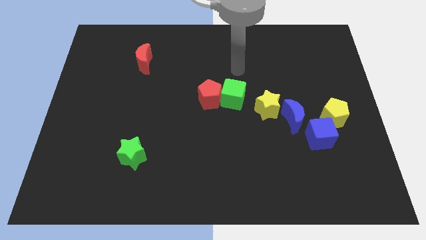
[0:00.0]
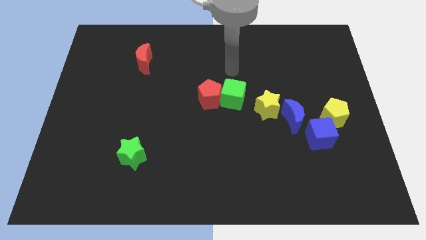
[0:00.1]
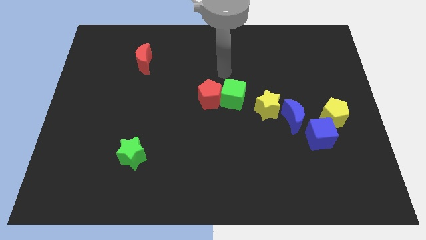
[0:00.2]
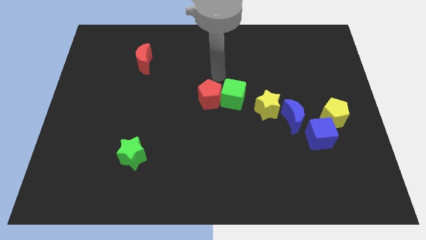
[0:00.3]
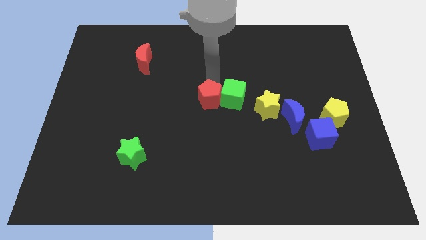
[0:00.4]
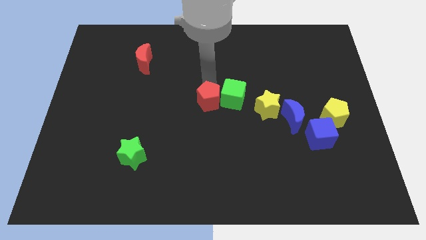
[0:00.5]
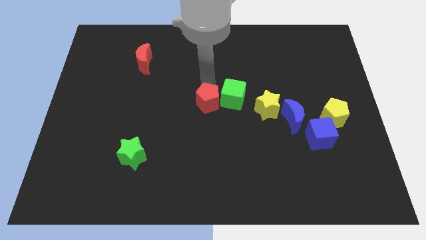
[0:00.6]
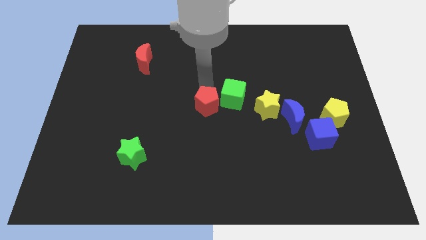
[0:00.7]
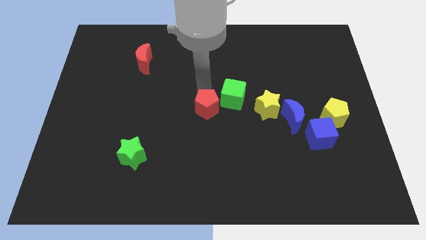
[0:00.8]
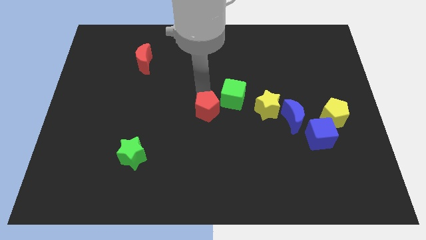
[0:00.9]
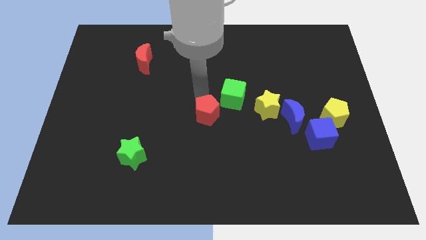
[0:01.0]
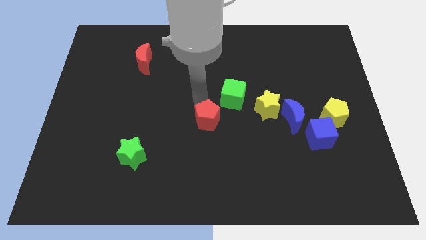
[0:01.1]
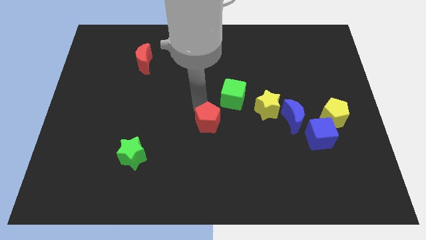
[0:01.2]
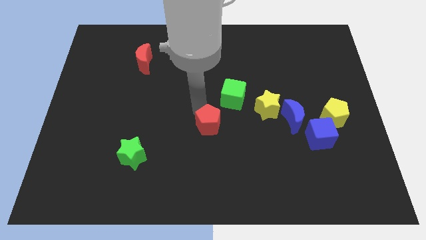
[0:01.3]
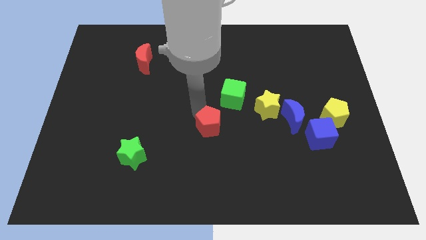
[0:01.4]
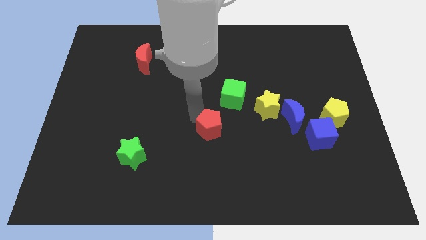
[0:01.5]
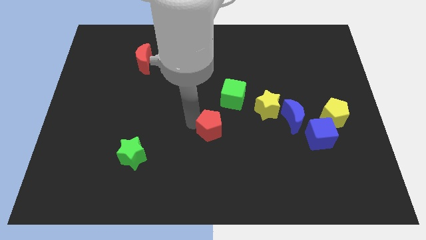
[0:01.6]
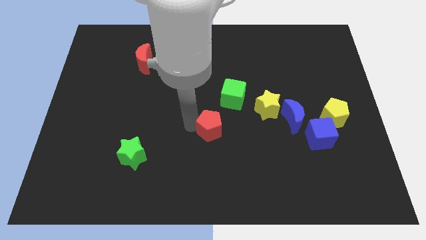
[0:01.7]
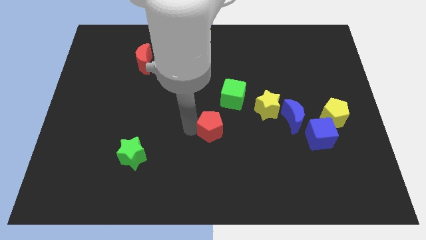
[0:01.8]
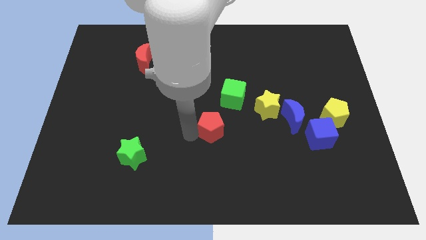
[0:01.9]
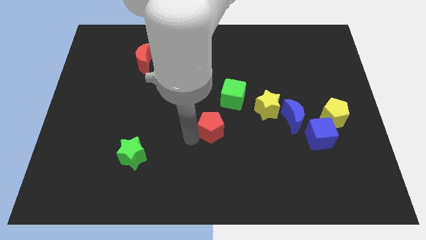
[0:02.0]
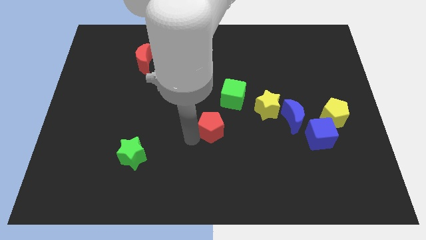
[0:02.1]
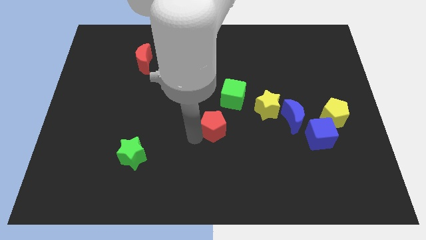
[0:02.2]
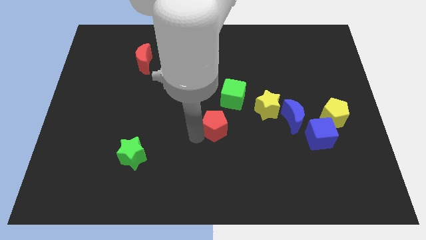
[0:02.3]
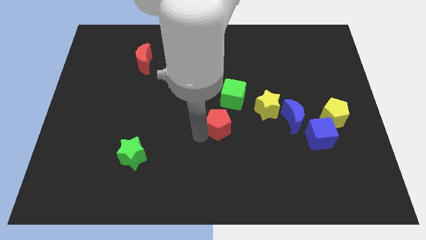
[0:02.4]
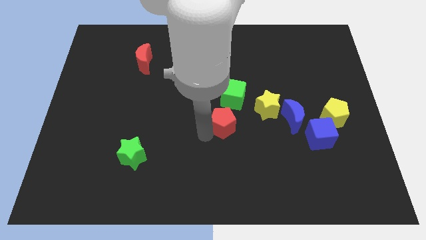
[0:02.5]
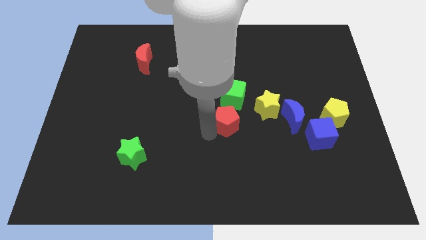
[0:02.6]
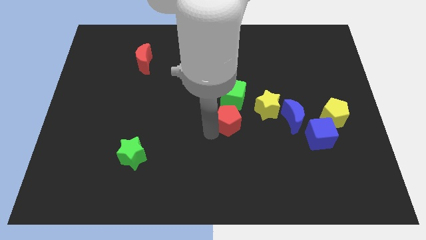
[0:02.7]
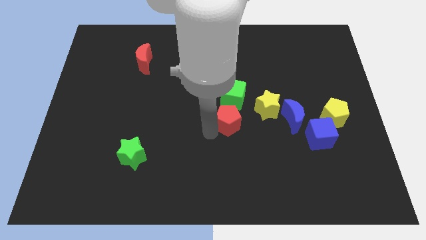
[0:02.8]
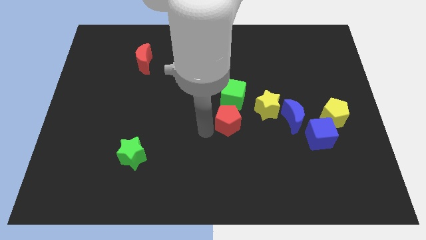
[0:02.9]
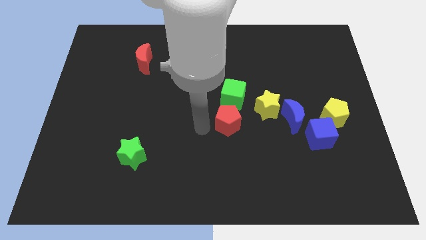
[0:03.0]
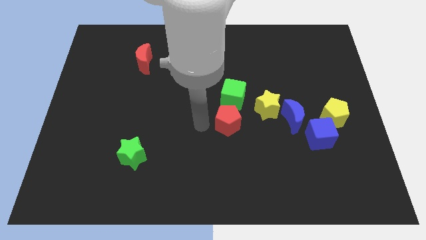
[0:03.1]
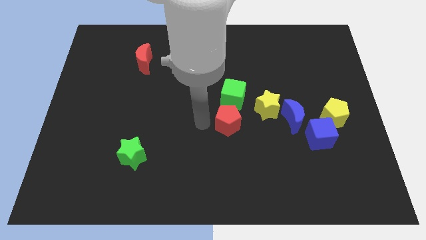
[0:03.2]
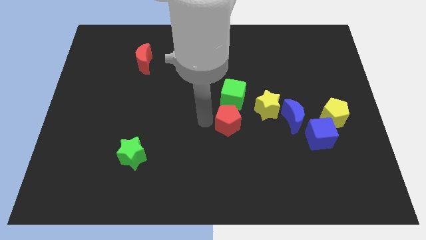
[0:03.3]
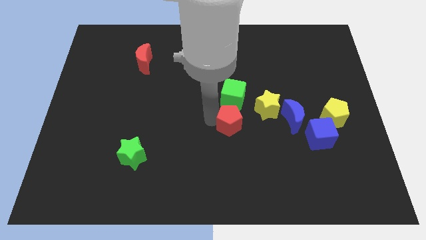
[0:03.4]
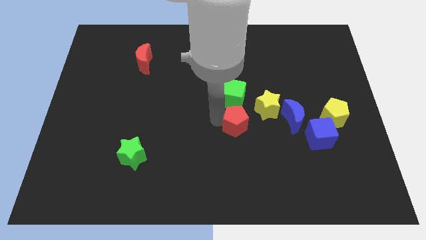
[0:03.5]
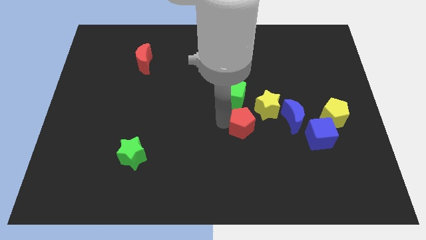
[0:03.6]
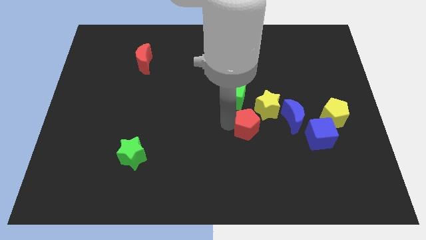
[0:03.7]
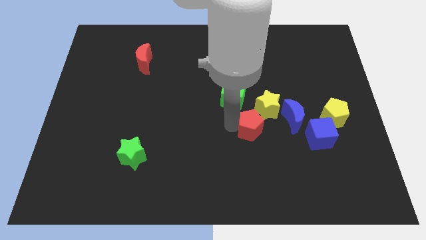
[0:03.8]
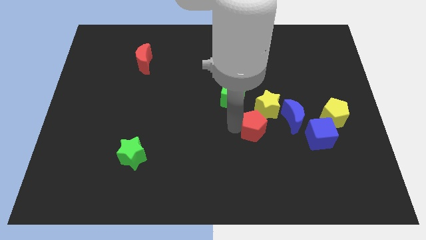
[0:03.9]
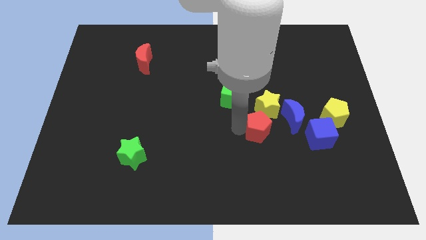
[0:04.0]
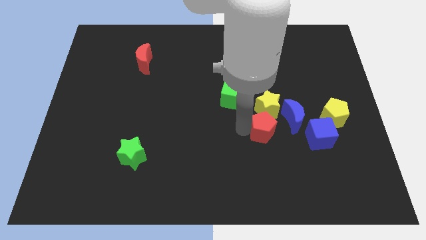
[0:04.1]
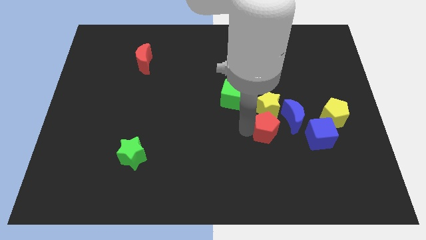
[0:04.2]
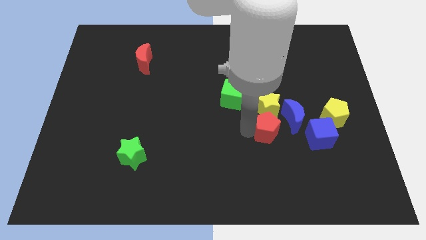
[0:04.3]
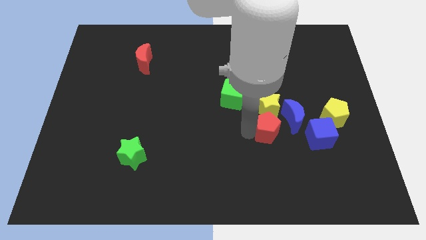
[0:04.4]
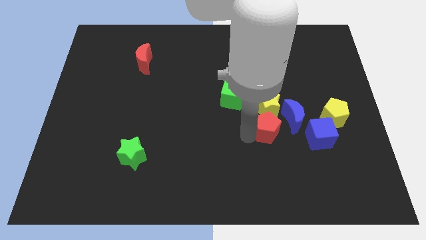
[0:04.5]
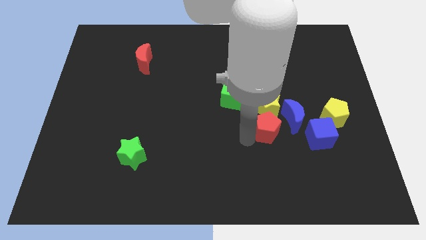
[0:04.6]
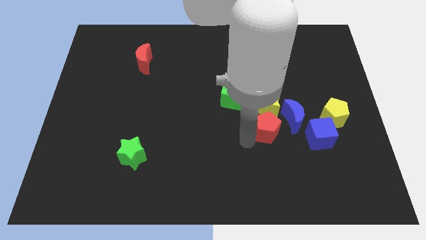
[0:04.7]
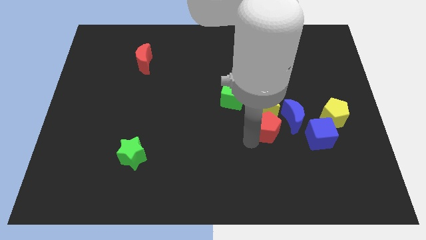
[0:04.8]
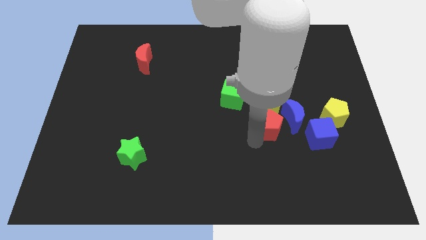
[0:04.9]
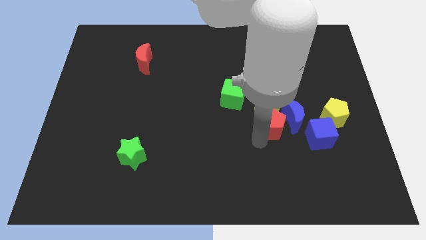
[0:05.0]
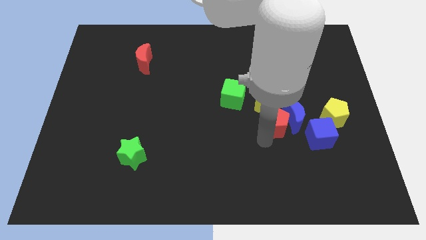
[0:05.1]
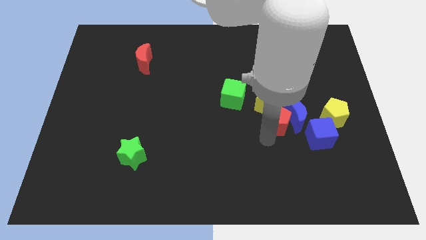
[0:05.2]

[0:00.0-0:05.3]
move the red pentagon towards the blue moon

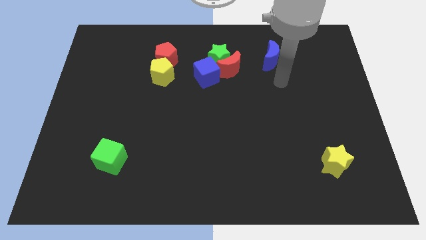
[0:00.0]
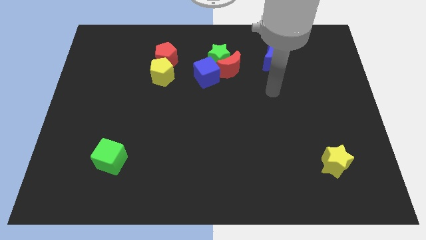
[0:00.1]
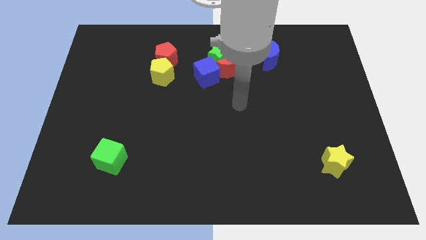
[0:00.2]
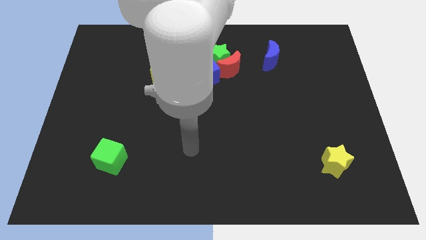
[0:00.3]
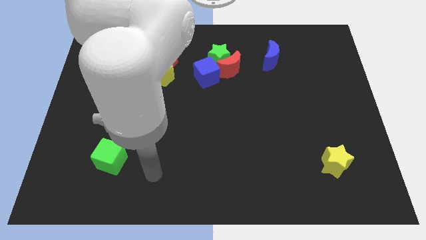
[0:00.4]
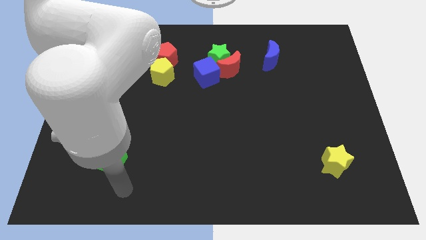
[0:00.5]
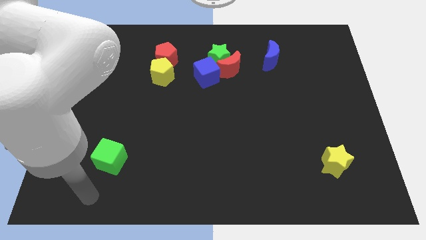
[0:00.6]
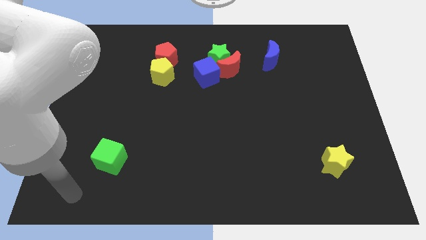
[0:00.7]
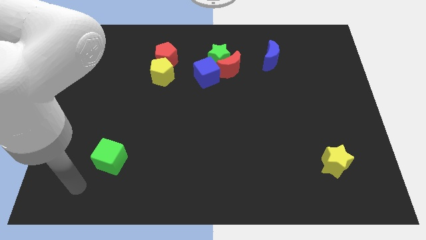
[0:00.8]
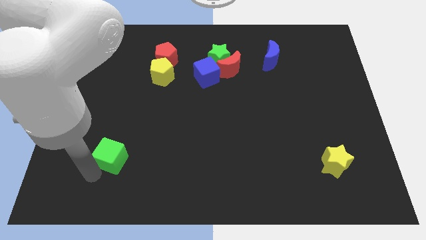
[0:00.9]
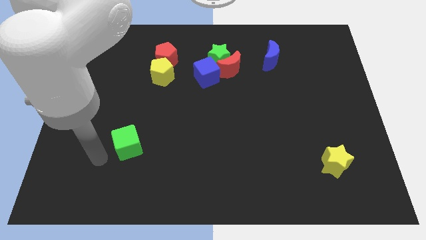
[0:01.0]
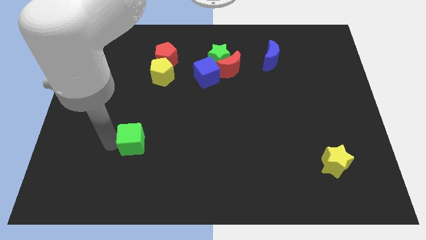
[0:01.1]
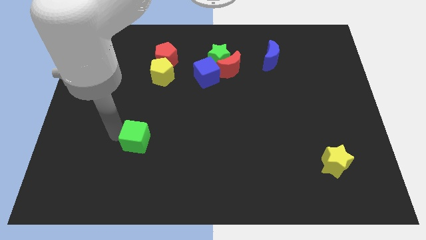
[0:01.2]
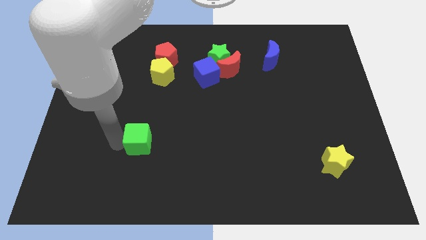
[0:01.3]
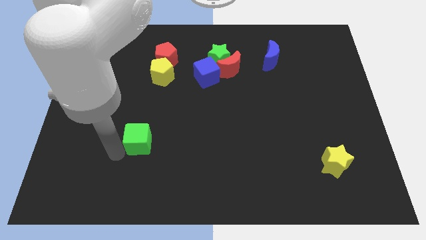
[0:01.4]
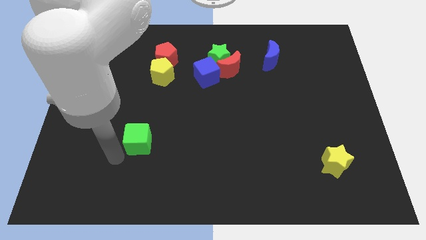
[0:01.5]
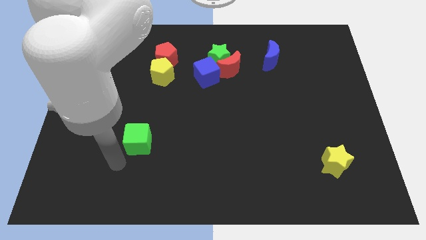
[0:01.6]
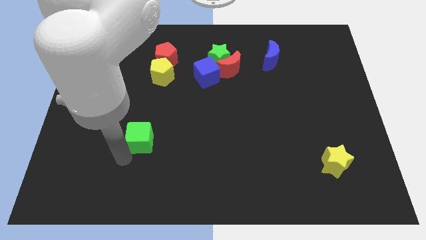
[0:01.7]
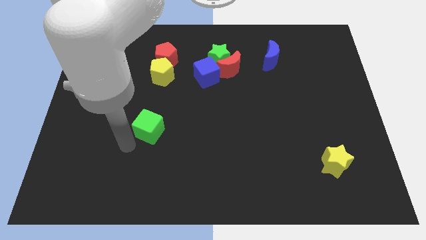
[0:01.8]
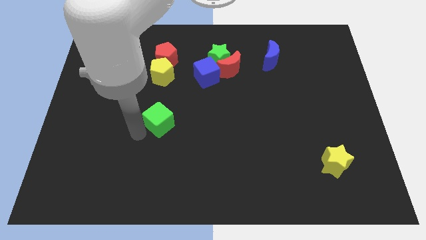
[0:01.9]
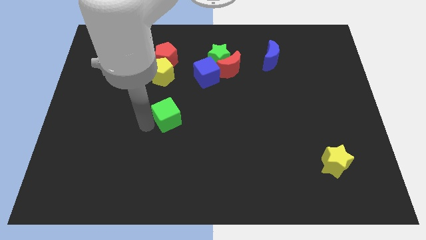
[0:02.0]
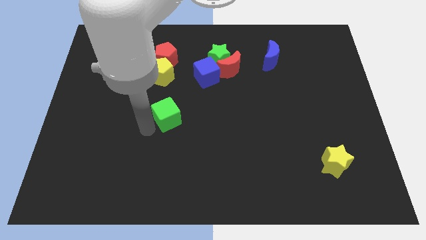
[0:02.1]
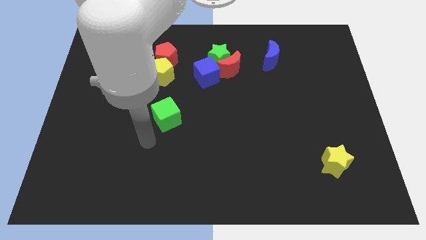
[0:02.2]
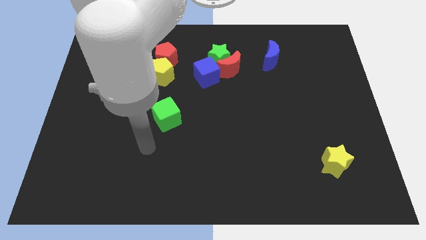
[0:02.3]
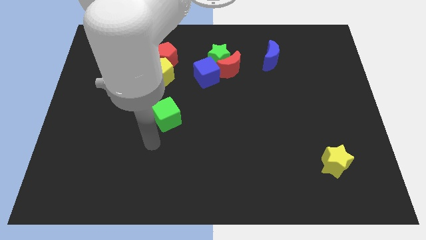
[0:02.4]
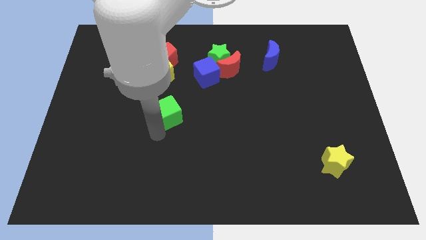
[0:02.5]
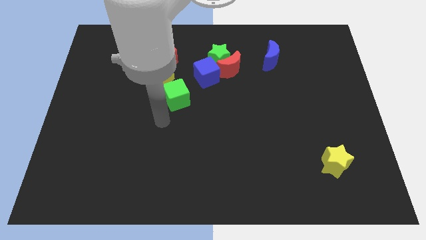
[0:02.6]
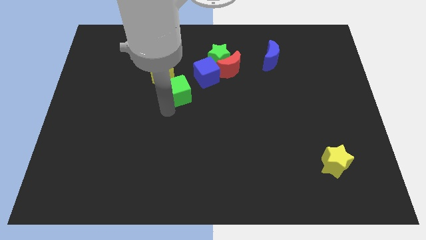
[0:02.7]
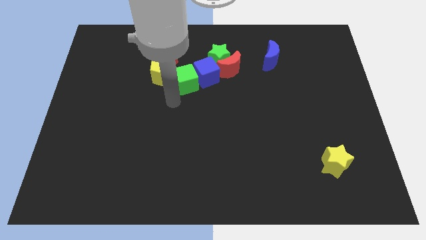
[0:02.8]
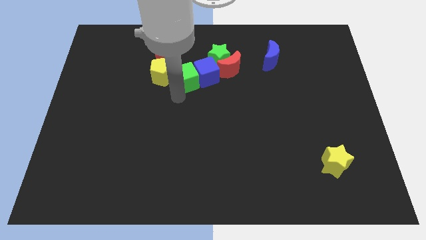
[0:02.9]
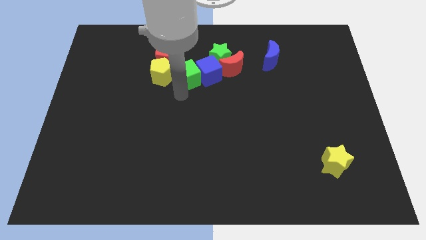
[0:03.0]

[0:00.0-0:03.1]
put the green cube close to the blue cube
